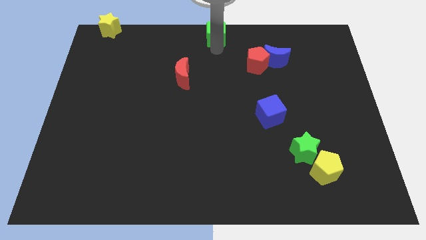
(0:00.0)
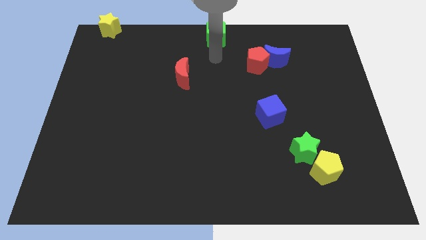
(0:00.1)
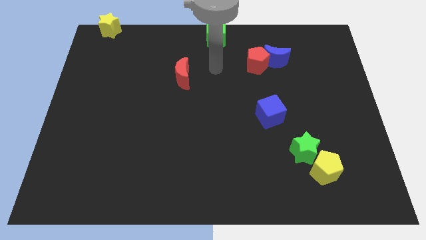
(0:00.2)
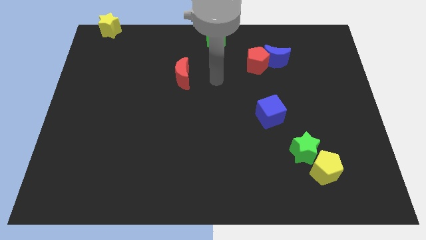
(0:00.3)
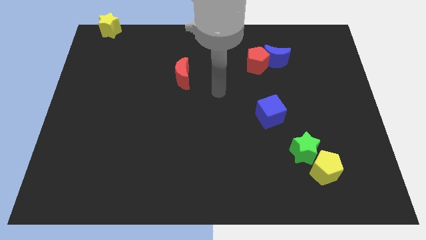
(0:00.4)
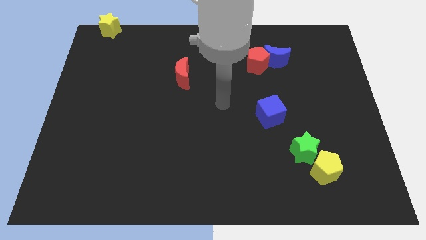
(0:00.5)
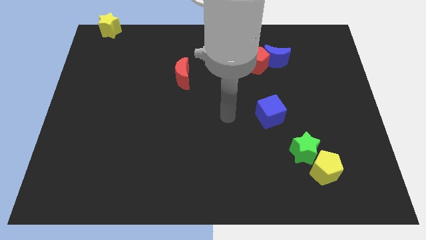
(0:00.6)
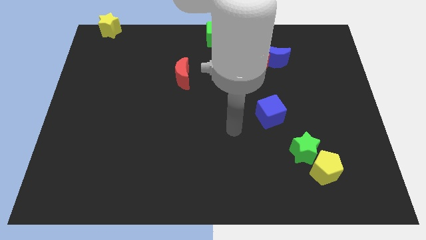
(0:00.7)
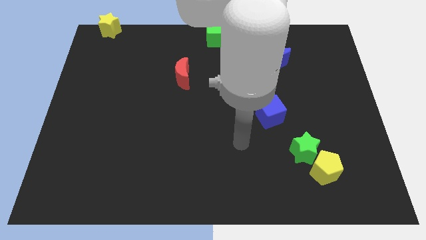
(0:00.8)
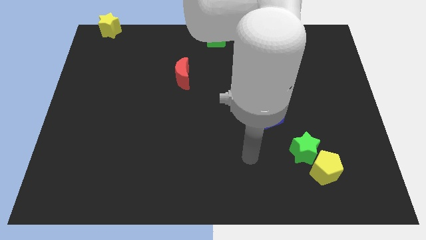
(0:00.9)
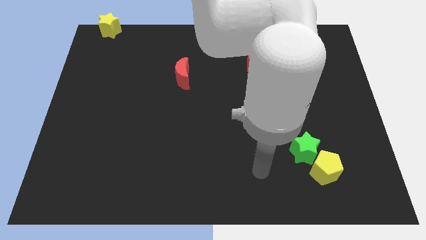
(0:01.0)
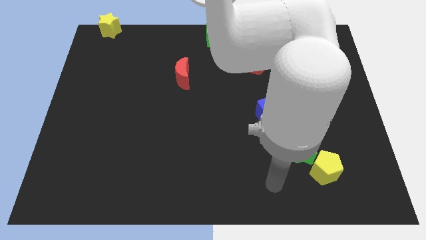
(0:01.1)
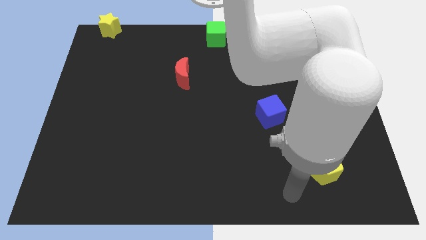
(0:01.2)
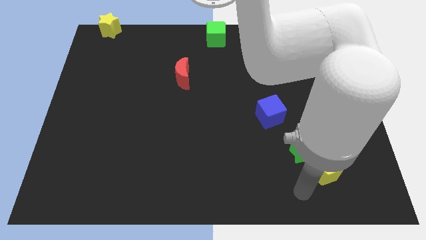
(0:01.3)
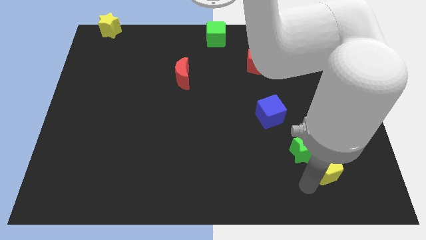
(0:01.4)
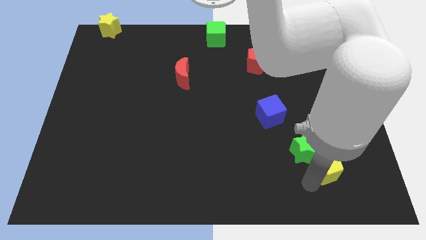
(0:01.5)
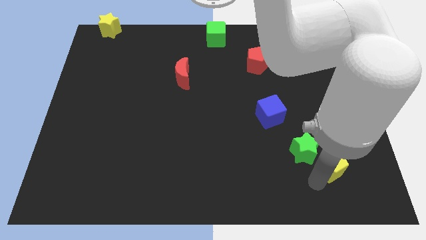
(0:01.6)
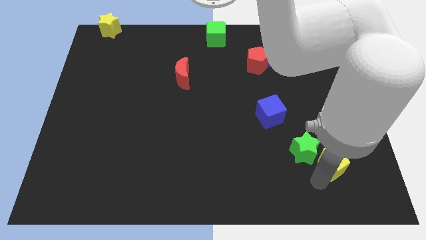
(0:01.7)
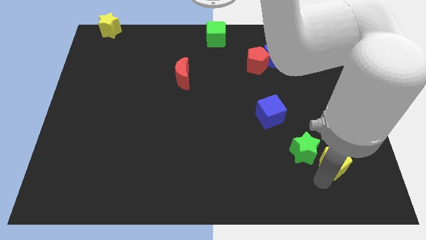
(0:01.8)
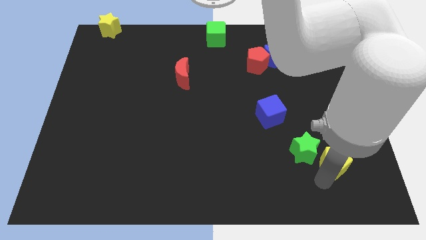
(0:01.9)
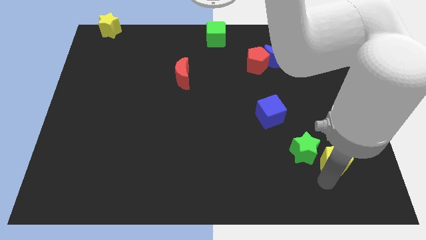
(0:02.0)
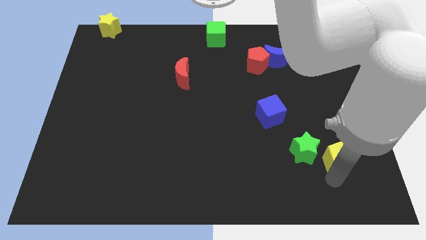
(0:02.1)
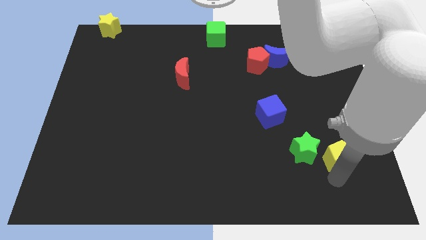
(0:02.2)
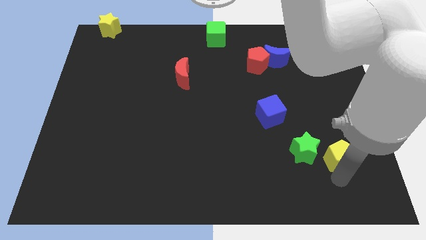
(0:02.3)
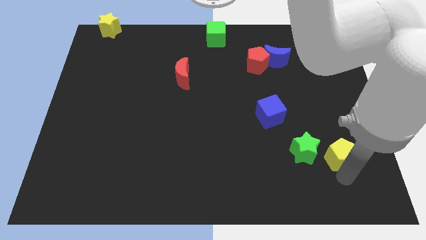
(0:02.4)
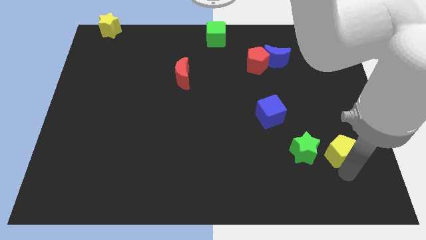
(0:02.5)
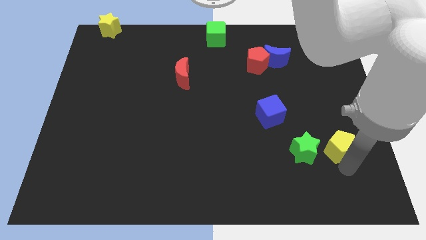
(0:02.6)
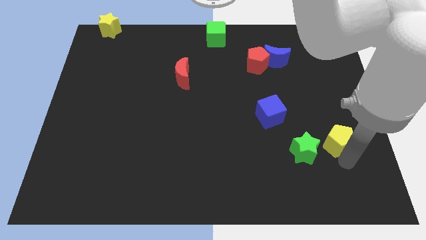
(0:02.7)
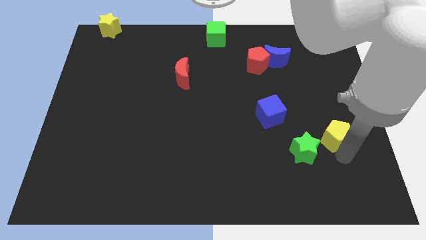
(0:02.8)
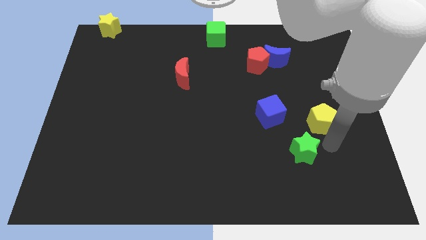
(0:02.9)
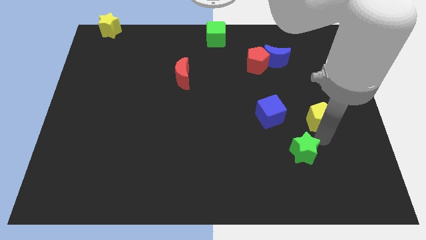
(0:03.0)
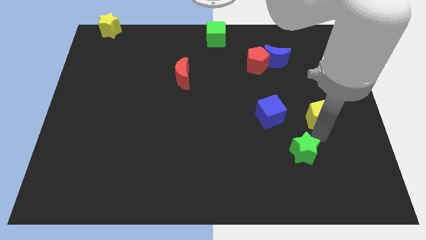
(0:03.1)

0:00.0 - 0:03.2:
move yellow pentagon diagonally on the top right side of the green star

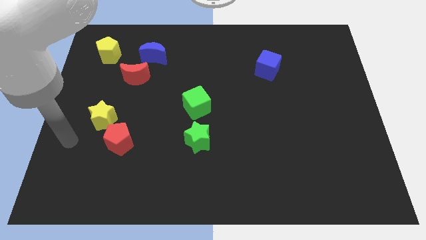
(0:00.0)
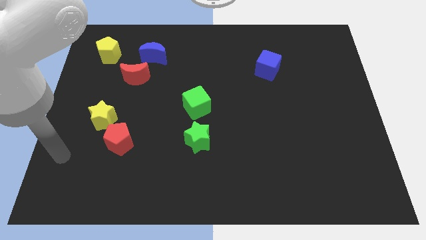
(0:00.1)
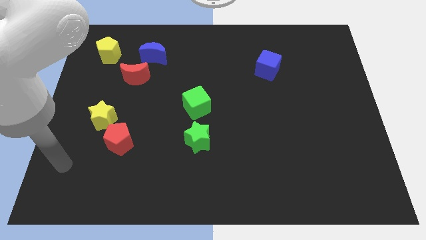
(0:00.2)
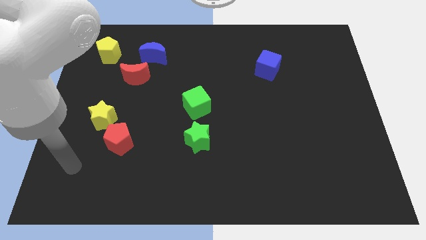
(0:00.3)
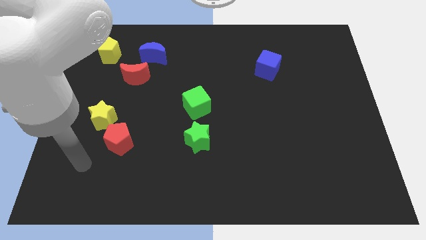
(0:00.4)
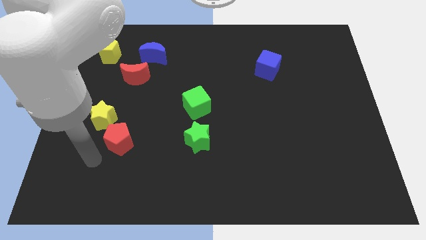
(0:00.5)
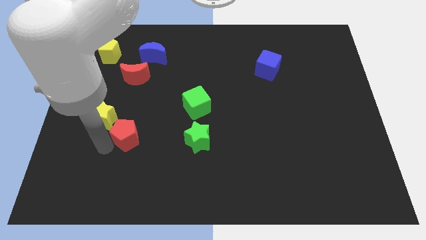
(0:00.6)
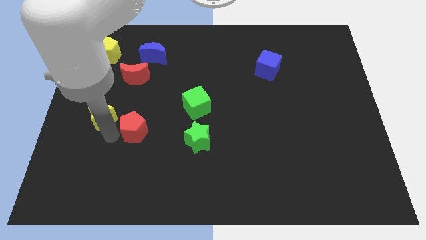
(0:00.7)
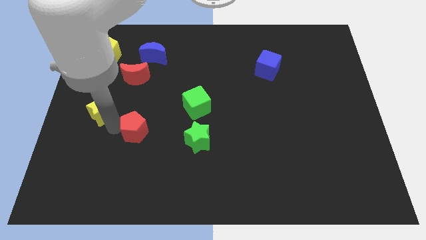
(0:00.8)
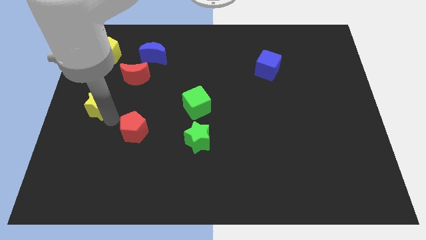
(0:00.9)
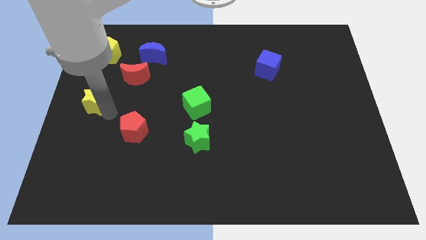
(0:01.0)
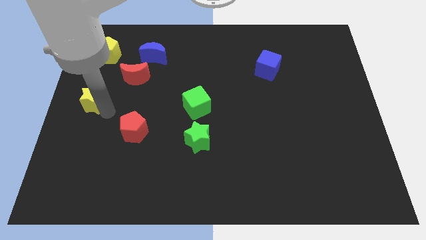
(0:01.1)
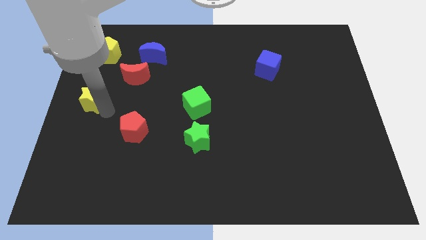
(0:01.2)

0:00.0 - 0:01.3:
push the yellow star towards the top of the board

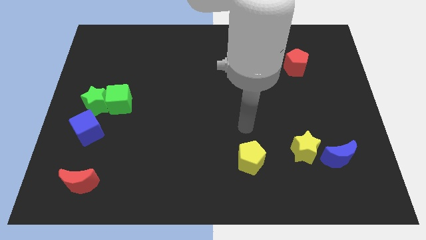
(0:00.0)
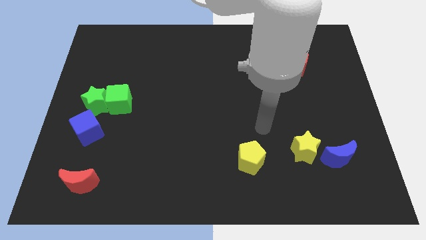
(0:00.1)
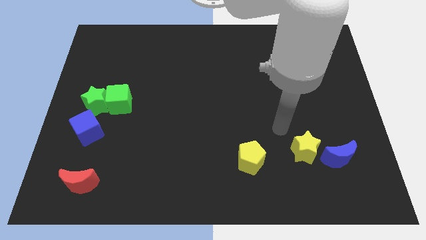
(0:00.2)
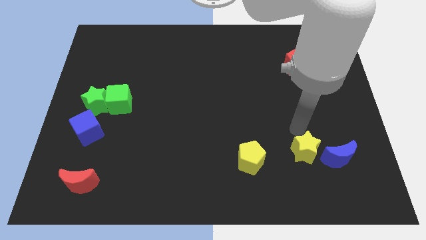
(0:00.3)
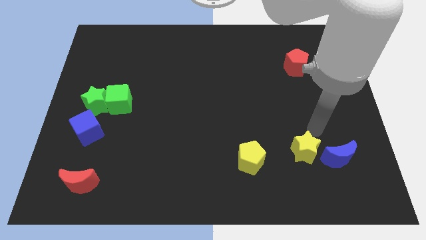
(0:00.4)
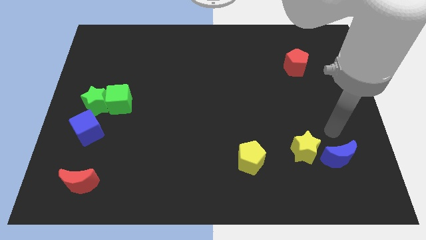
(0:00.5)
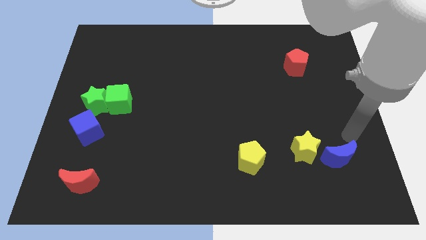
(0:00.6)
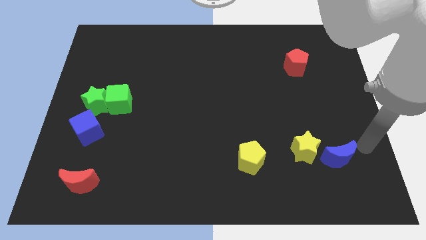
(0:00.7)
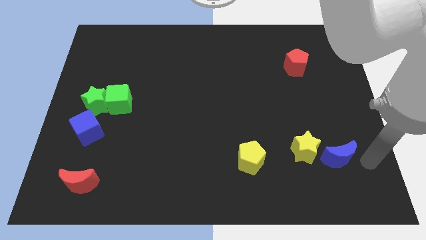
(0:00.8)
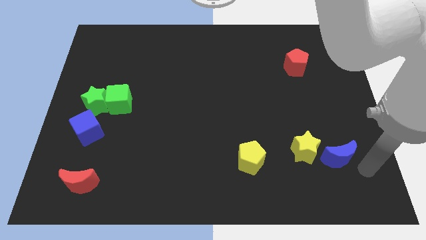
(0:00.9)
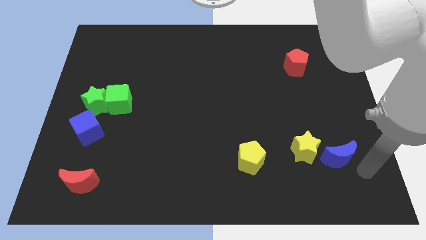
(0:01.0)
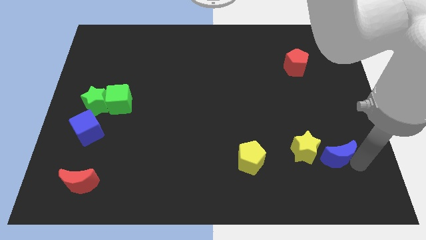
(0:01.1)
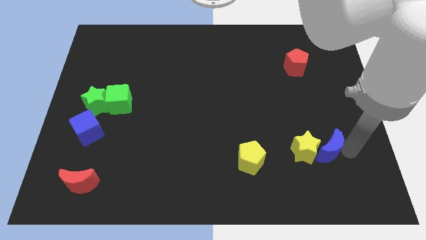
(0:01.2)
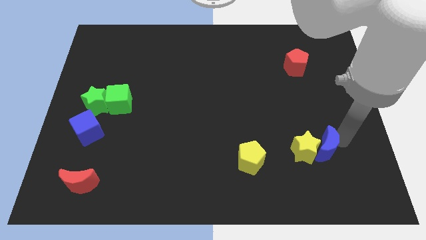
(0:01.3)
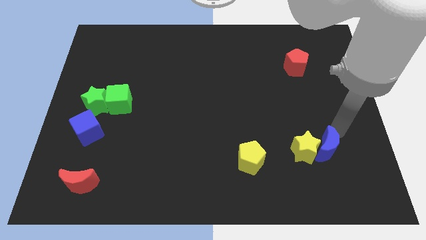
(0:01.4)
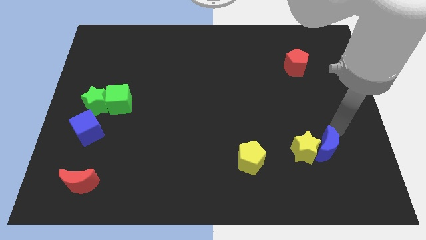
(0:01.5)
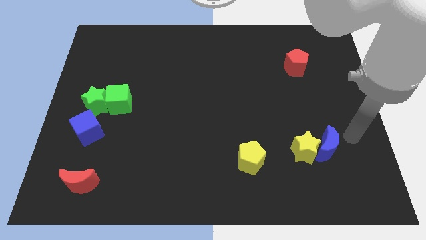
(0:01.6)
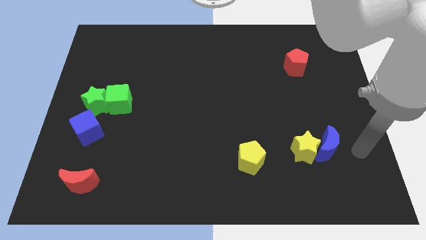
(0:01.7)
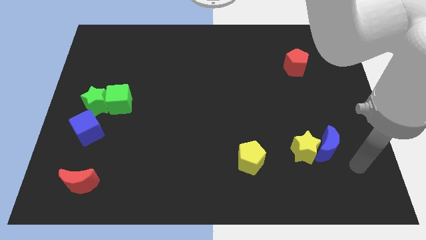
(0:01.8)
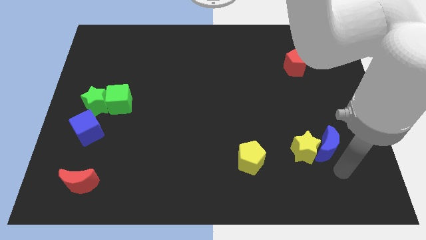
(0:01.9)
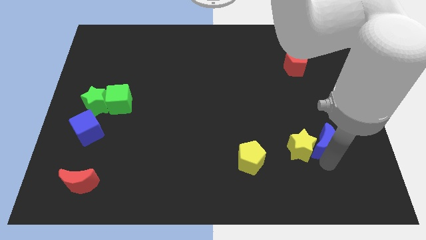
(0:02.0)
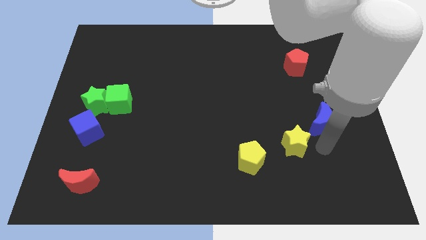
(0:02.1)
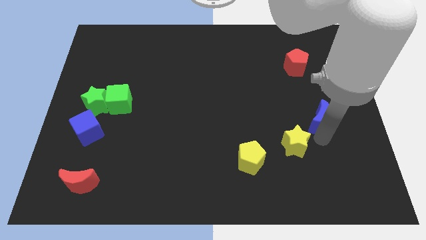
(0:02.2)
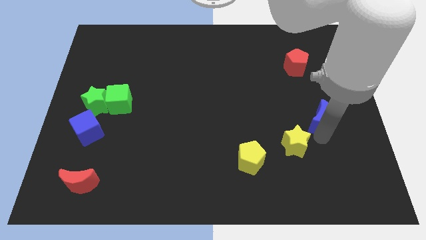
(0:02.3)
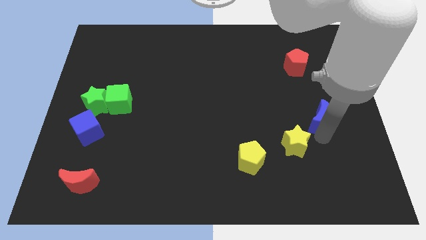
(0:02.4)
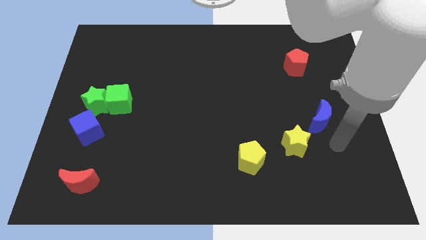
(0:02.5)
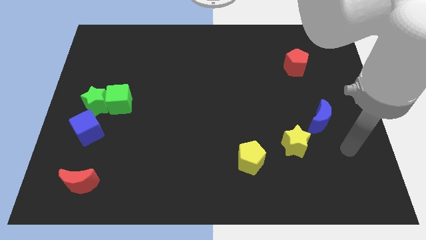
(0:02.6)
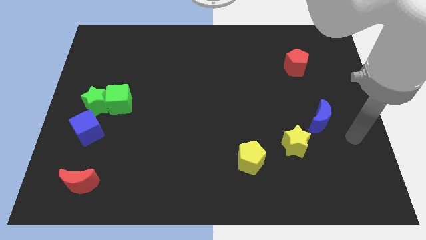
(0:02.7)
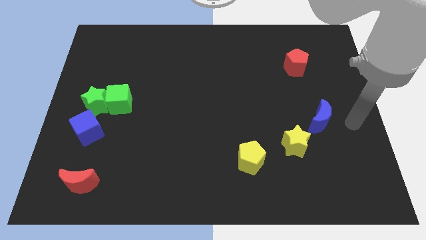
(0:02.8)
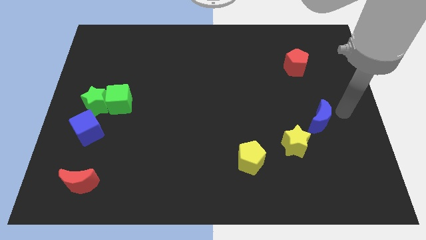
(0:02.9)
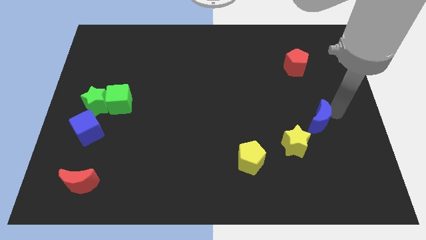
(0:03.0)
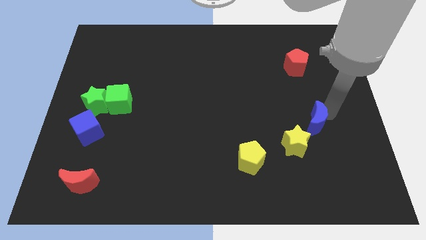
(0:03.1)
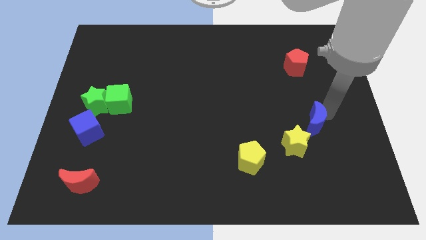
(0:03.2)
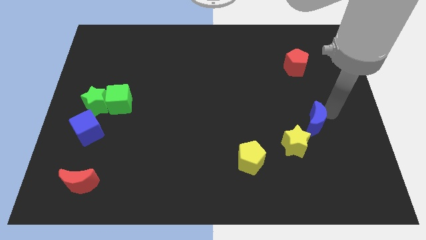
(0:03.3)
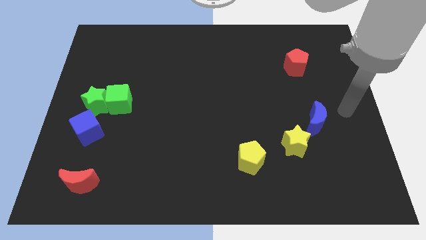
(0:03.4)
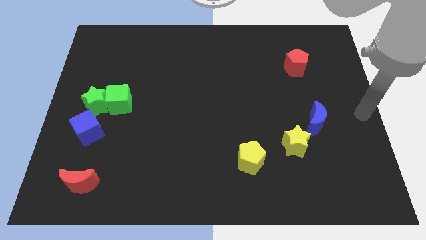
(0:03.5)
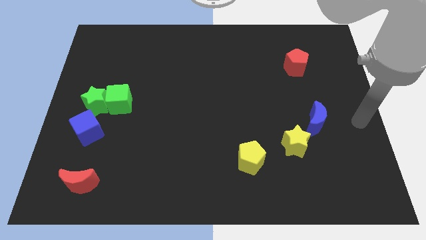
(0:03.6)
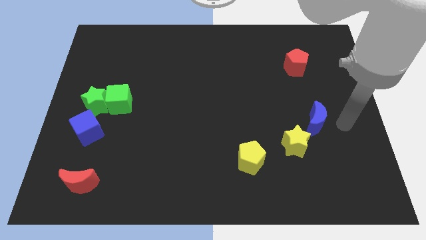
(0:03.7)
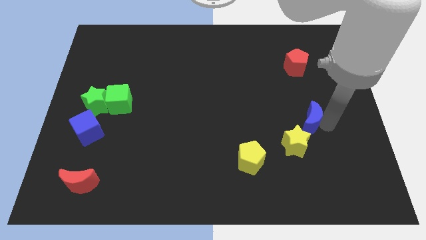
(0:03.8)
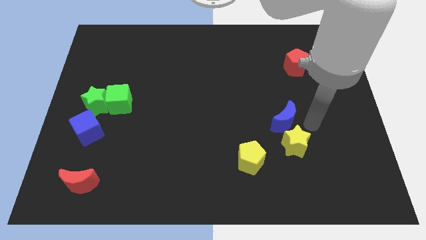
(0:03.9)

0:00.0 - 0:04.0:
move the blue crescent to the top side of the yellow star

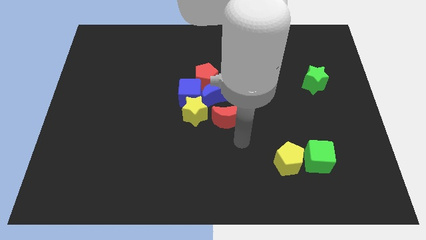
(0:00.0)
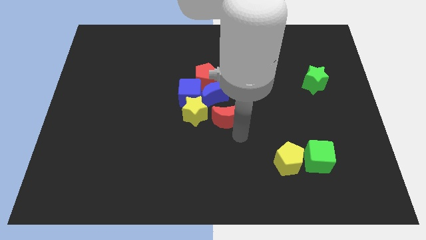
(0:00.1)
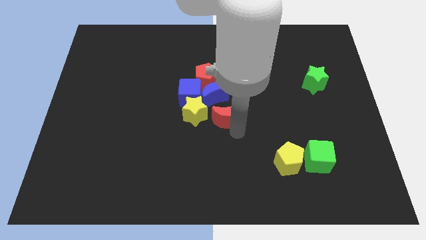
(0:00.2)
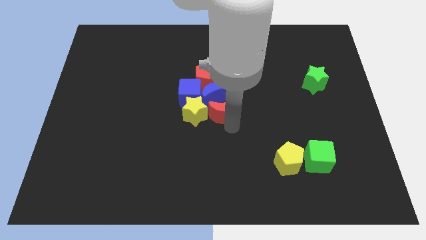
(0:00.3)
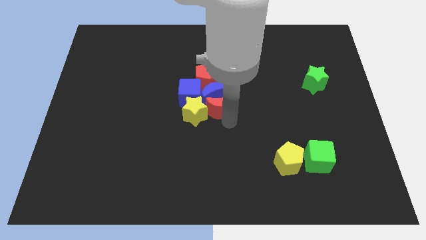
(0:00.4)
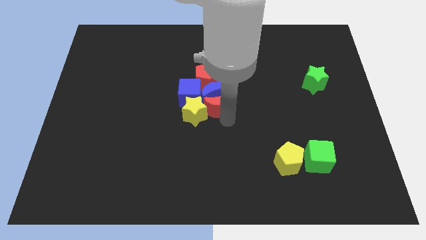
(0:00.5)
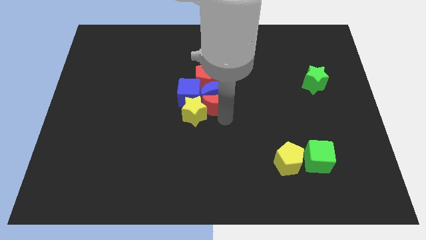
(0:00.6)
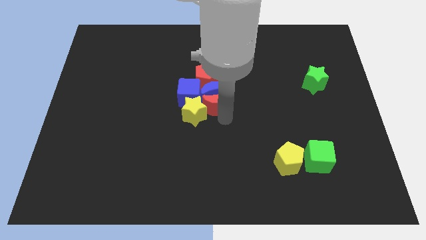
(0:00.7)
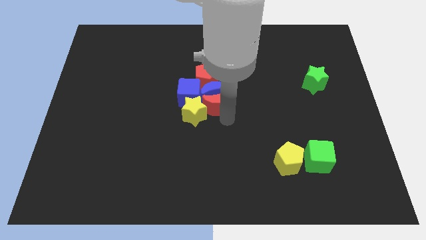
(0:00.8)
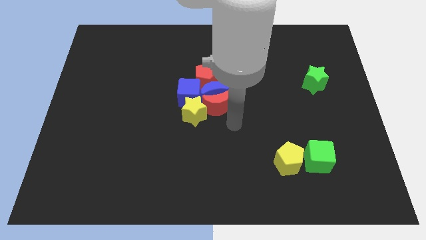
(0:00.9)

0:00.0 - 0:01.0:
move the red crescent into the bottom side of the blue crescent
